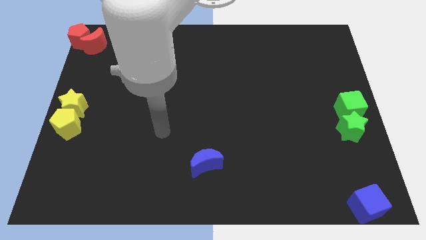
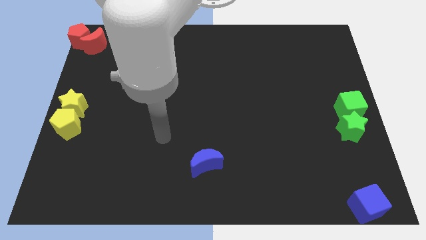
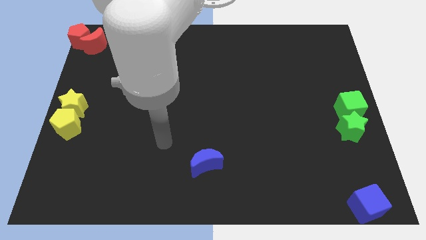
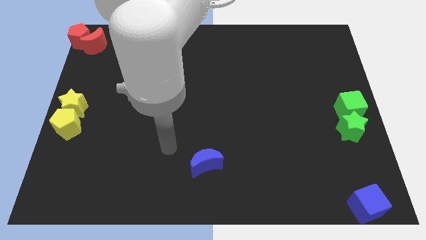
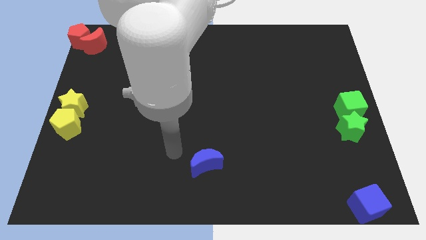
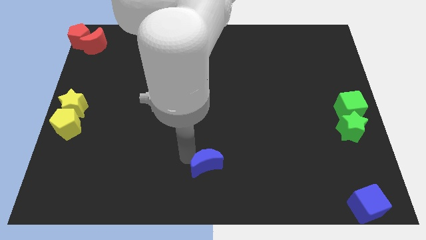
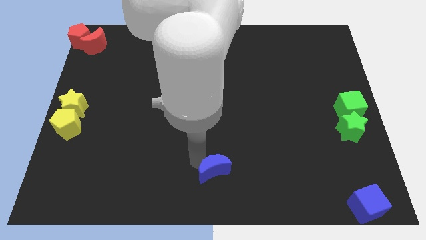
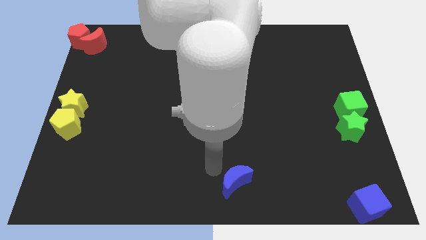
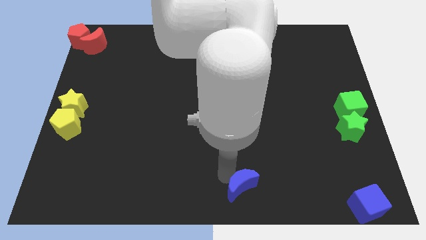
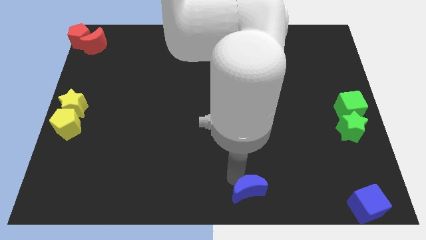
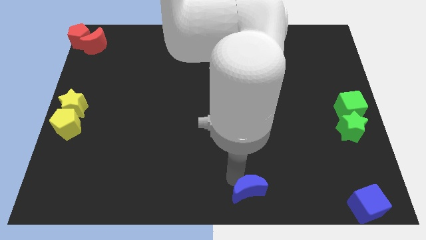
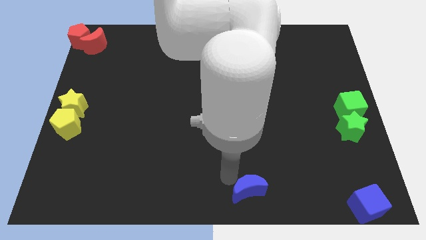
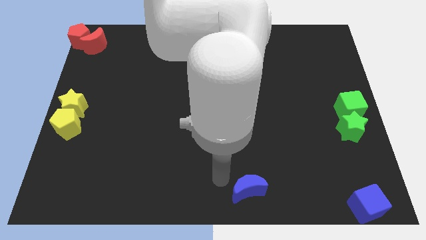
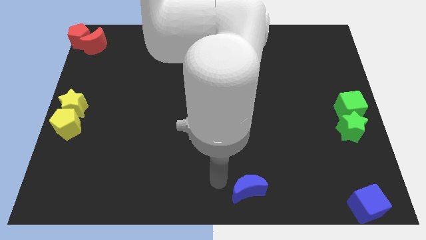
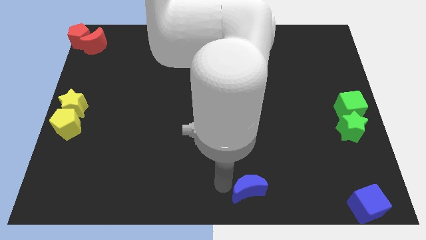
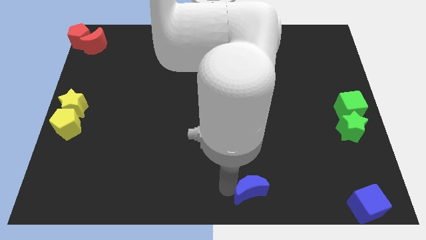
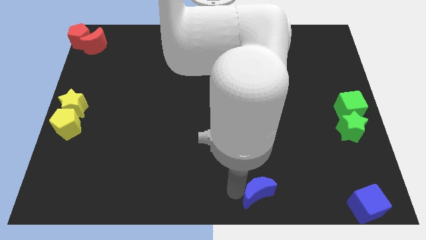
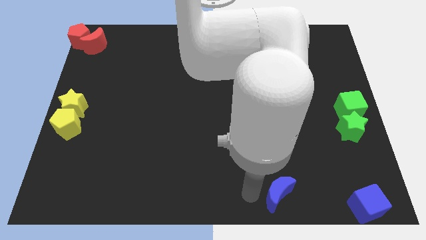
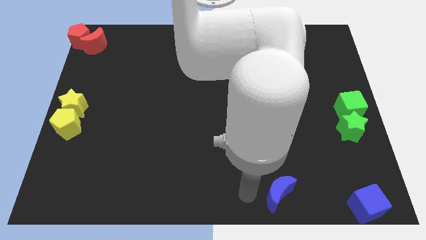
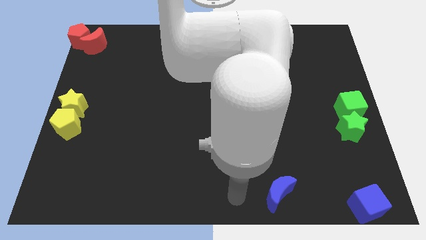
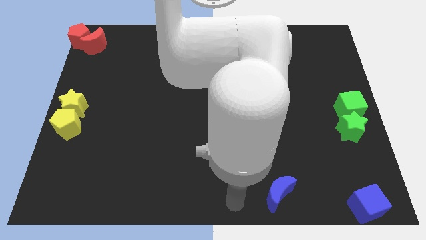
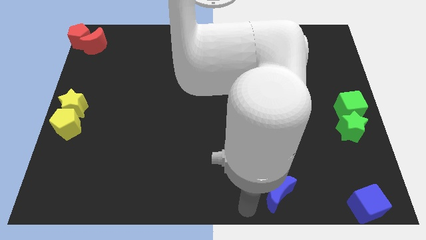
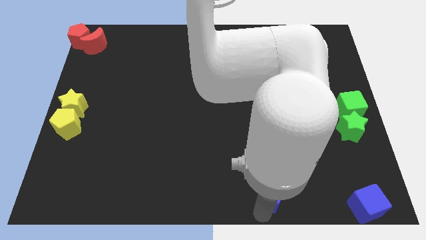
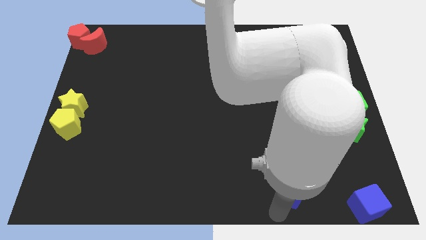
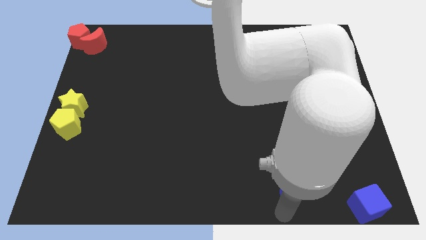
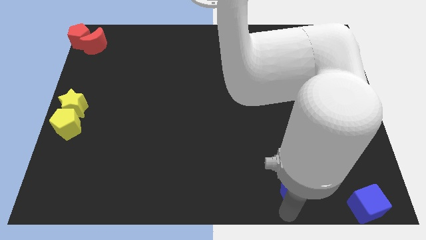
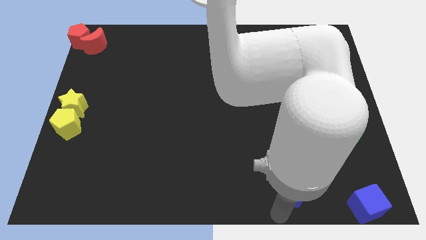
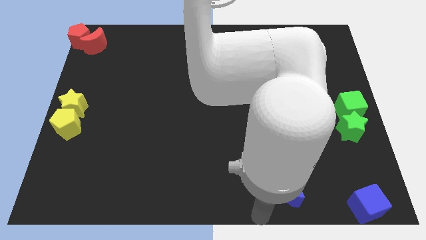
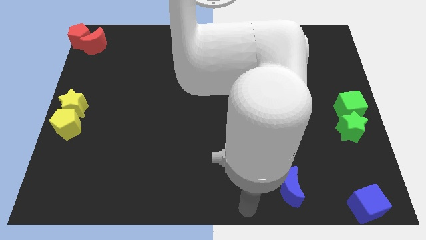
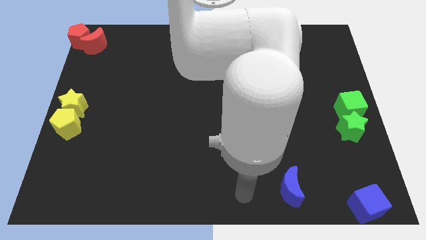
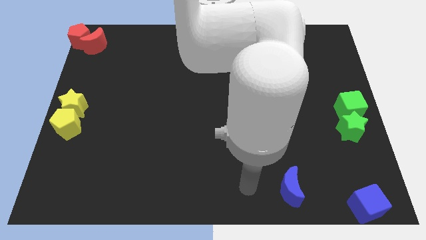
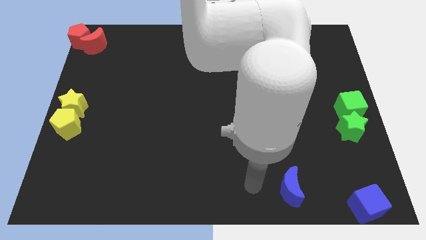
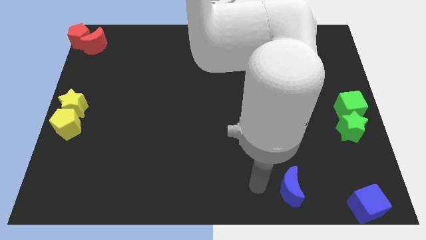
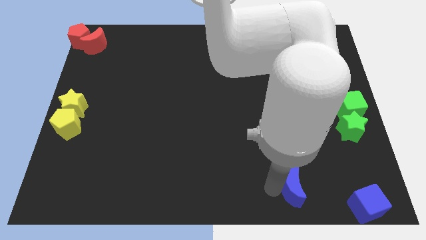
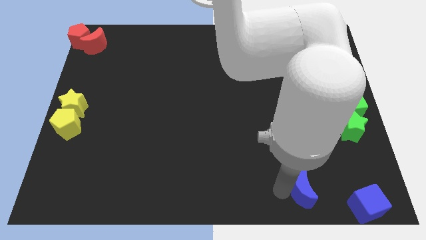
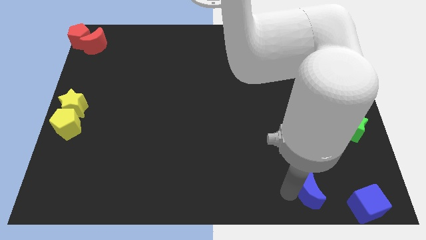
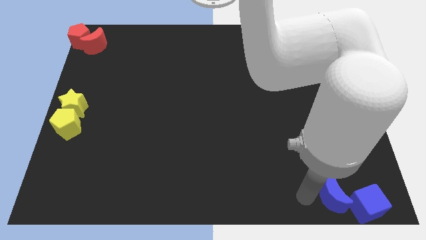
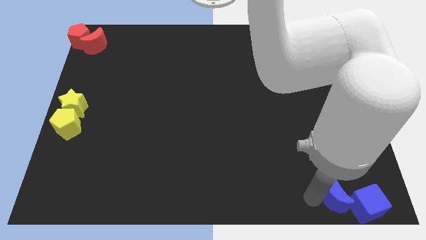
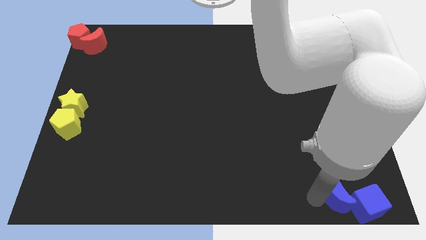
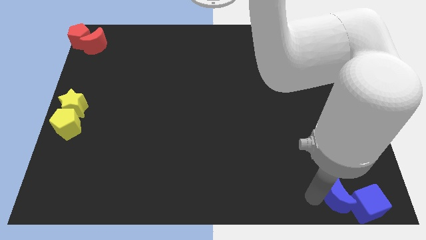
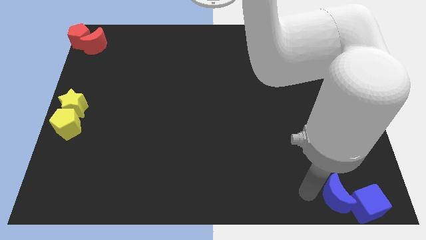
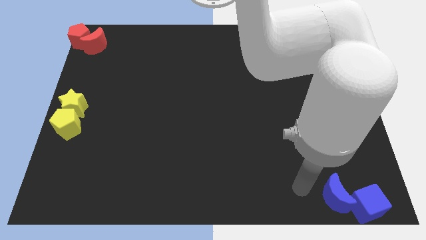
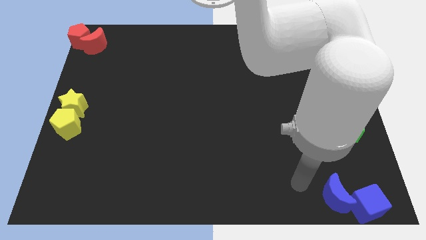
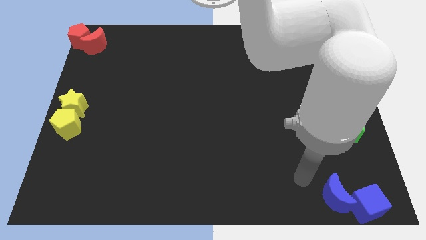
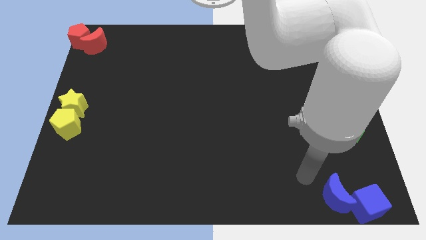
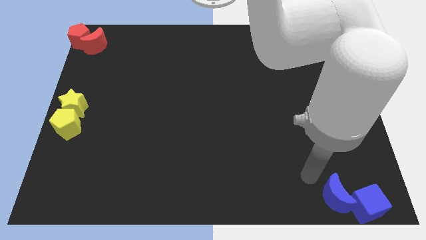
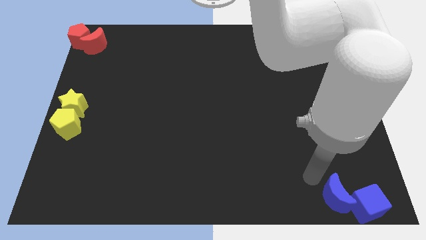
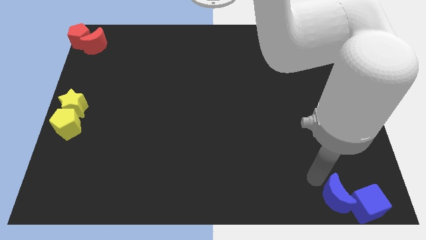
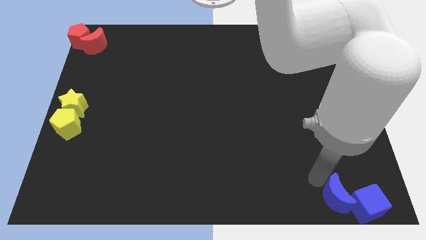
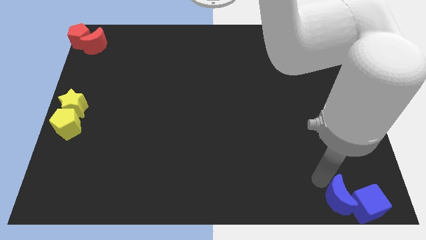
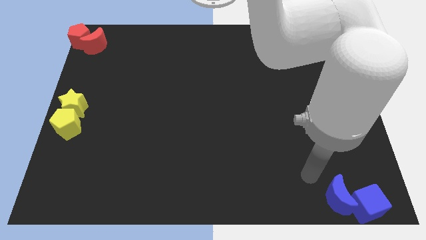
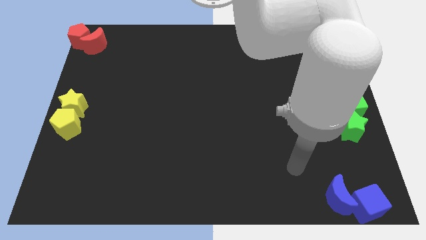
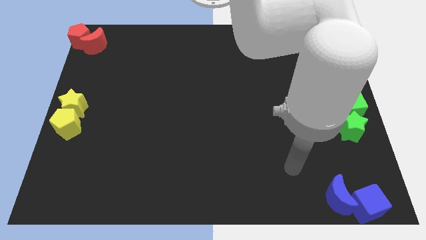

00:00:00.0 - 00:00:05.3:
push the blue crescent towards the blue cube

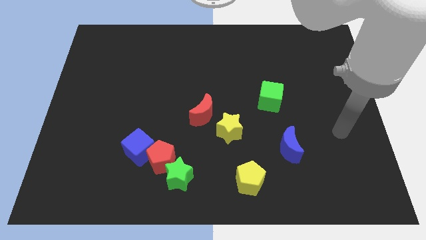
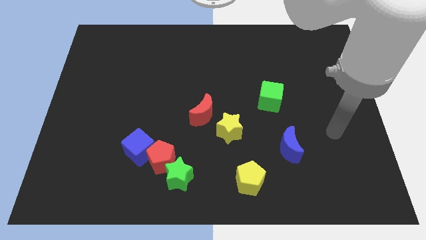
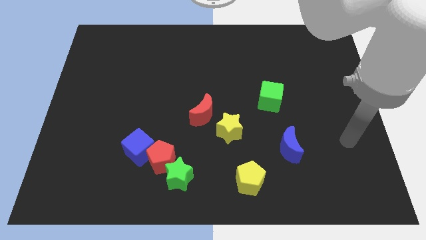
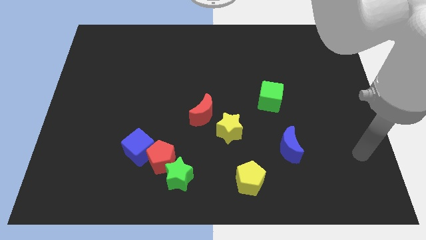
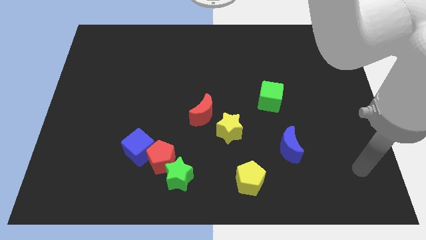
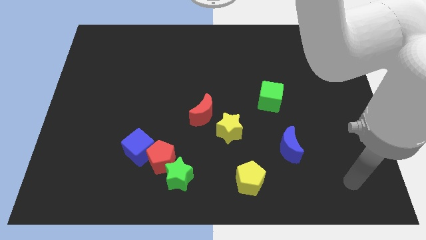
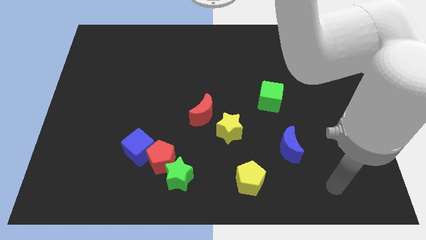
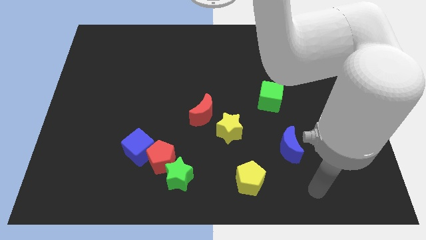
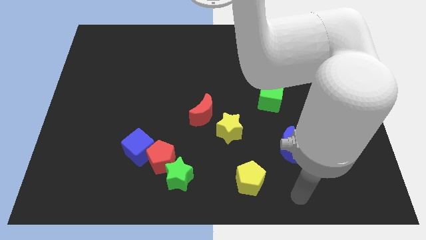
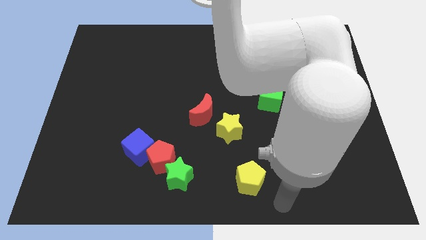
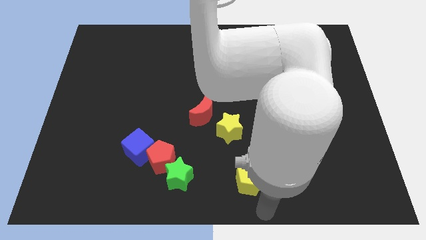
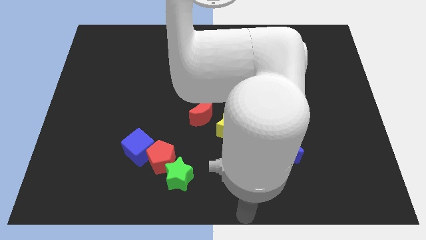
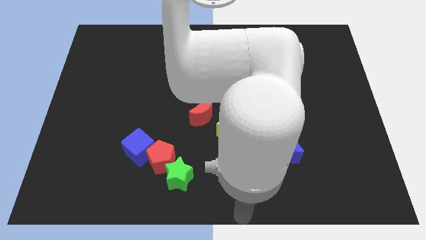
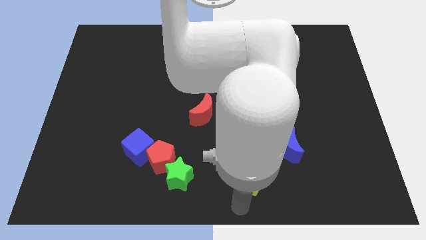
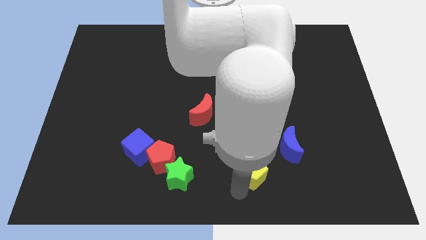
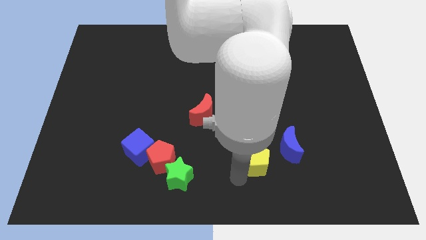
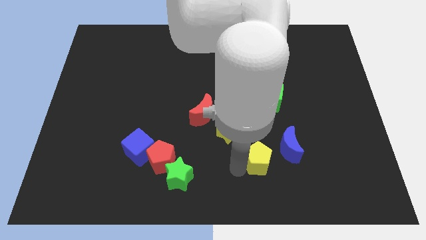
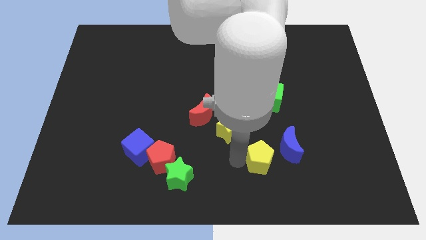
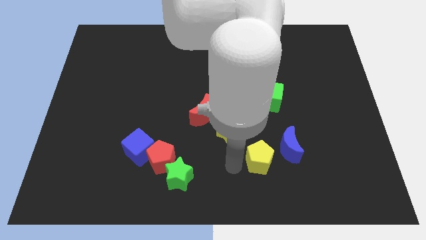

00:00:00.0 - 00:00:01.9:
move the yellow pentagon close to the blue crescent

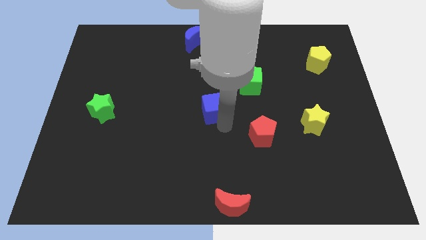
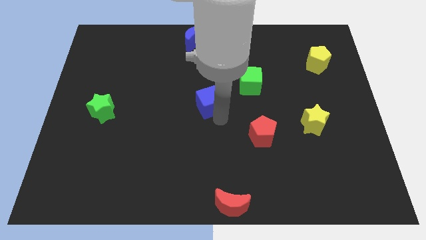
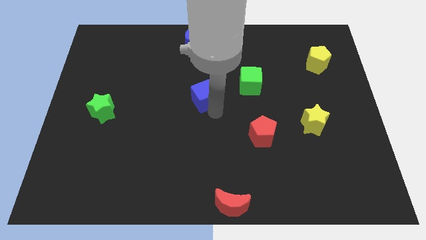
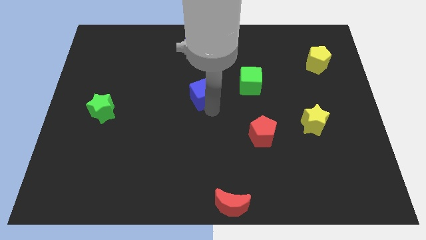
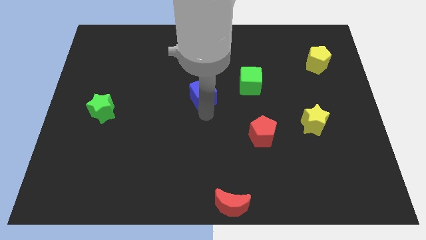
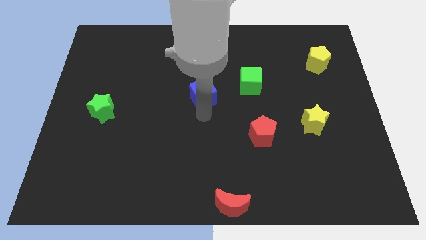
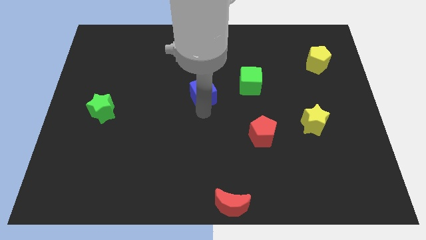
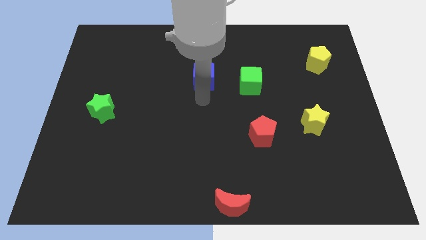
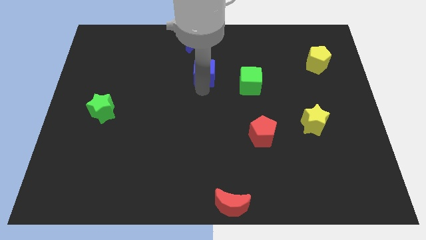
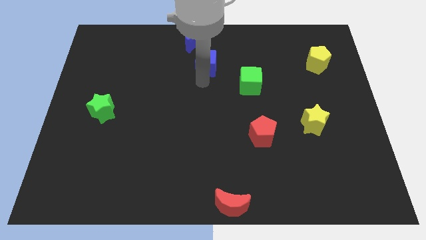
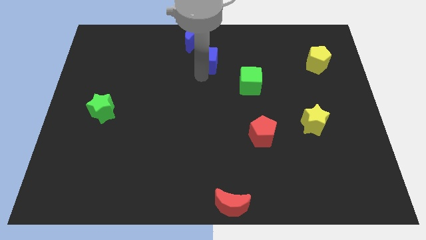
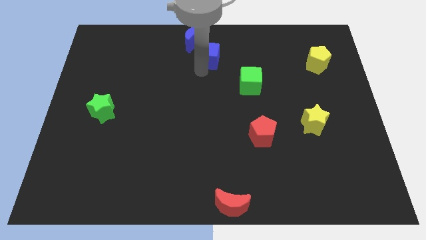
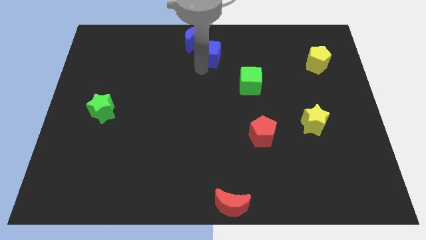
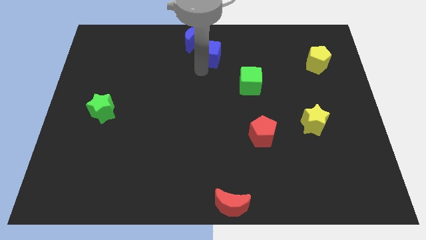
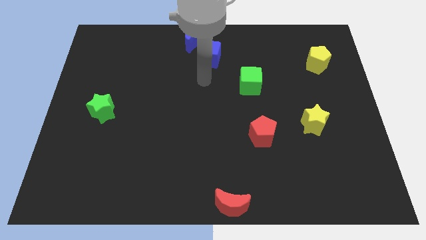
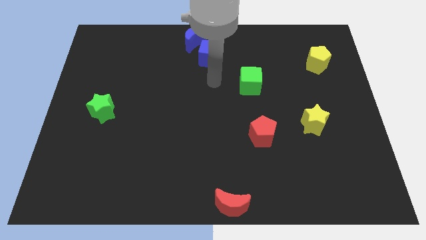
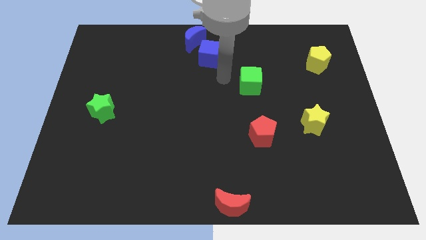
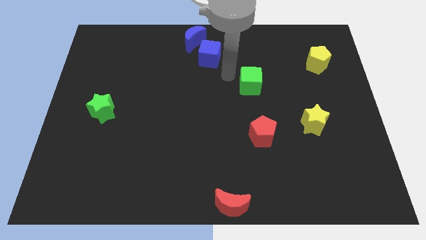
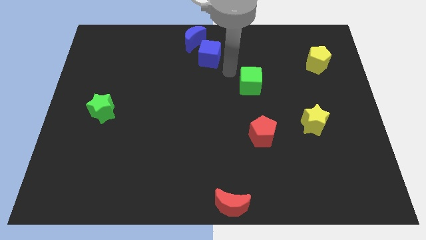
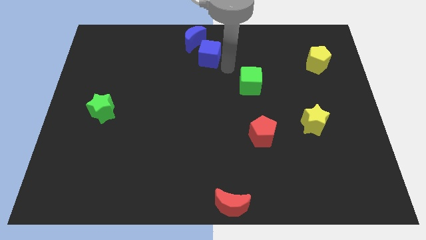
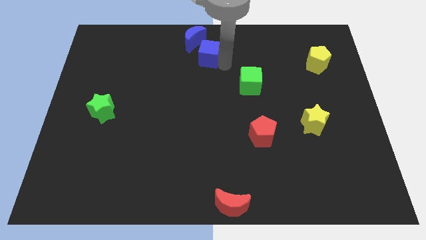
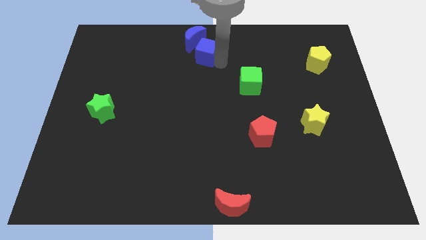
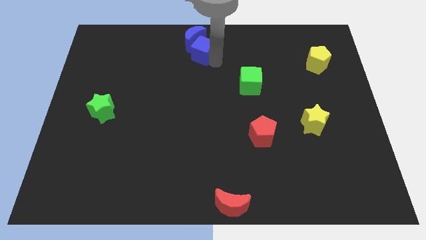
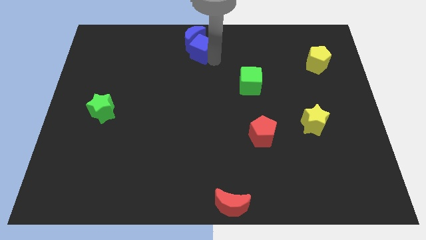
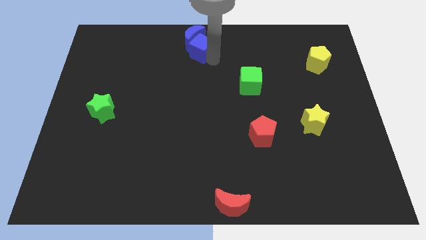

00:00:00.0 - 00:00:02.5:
push the blue cube into blue moon
